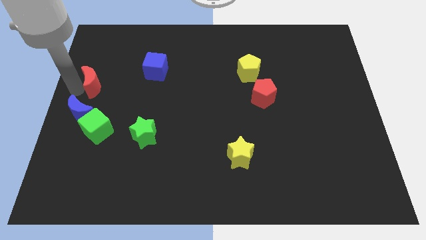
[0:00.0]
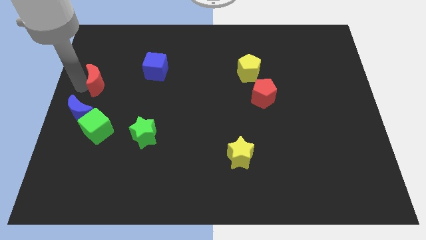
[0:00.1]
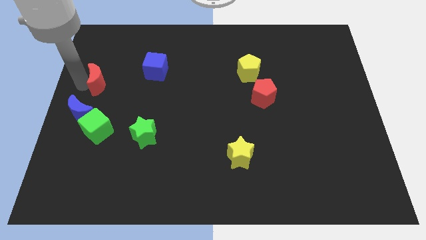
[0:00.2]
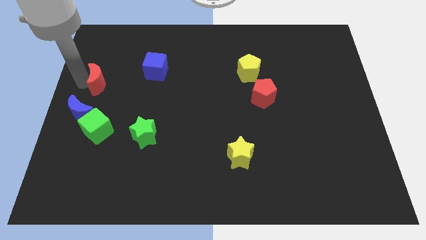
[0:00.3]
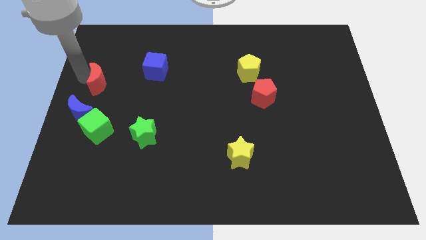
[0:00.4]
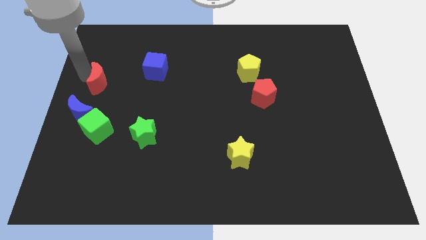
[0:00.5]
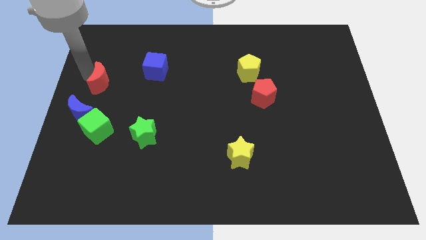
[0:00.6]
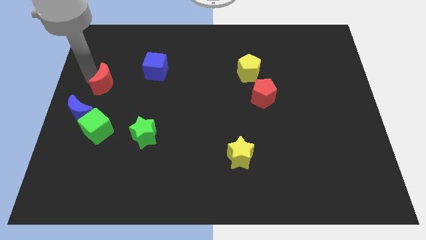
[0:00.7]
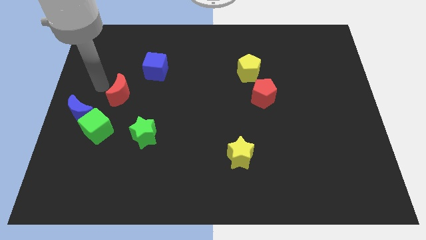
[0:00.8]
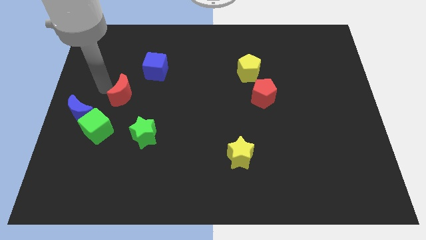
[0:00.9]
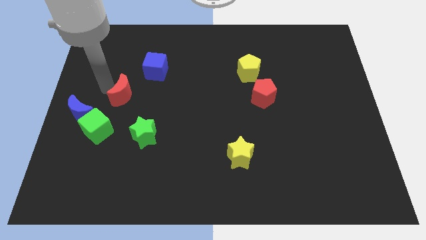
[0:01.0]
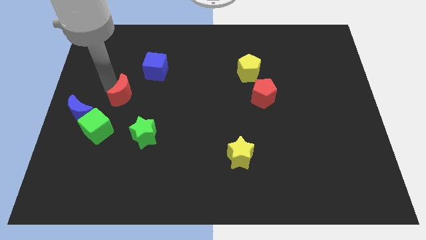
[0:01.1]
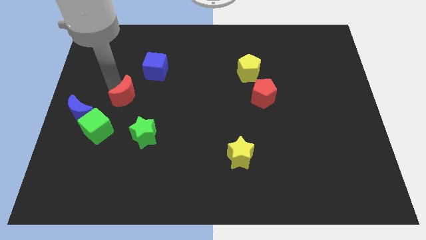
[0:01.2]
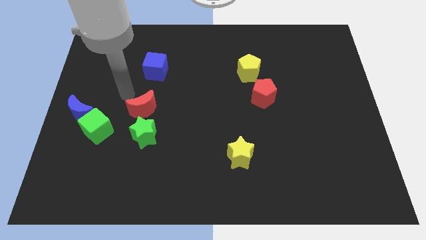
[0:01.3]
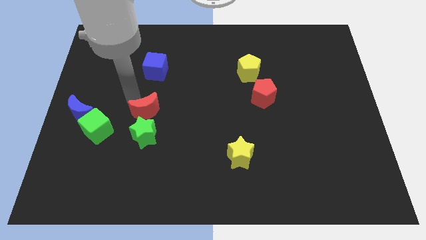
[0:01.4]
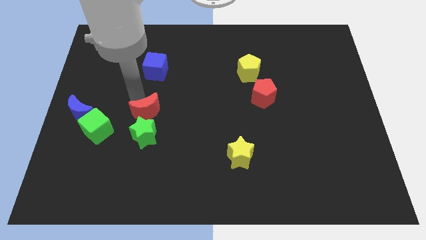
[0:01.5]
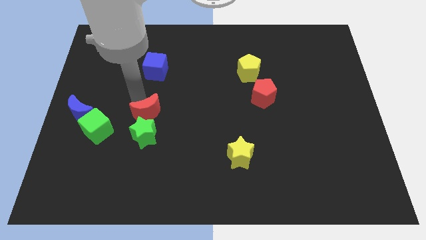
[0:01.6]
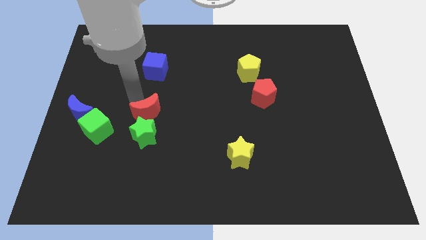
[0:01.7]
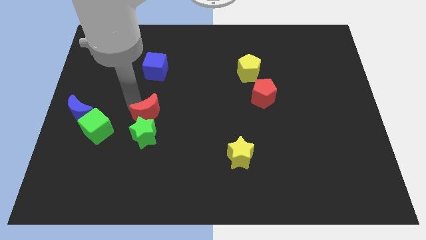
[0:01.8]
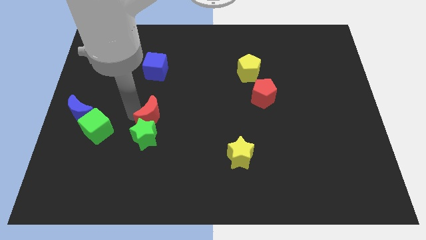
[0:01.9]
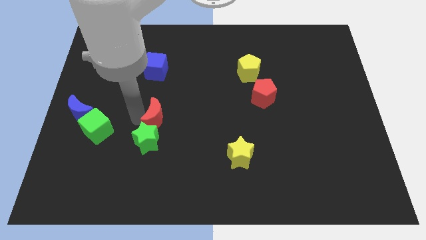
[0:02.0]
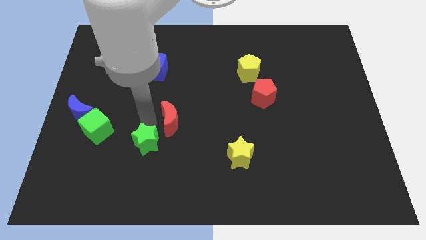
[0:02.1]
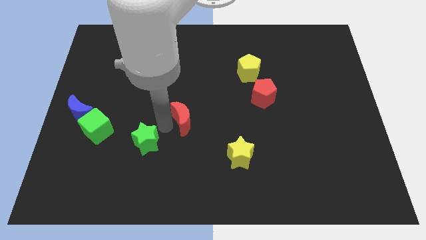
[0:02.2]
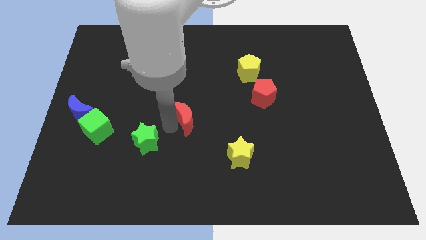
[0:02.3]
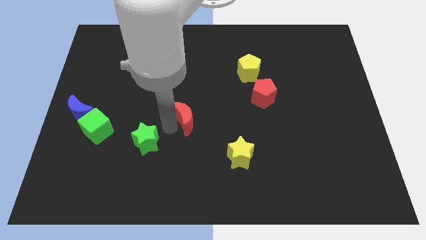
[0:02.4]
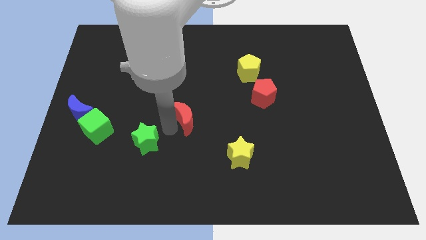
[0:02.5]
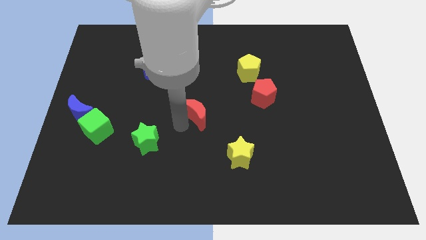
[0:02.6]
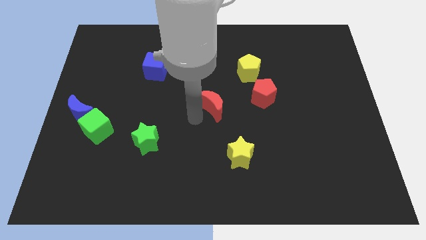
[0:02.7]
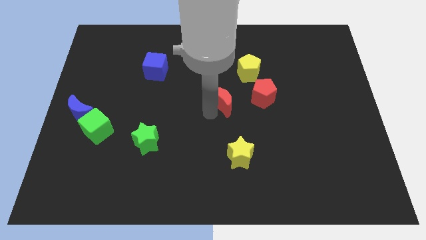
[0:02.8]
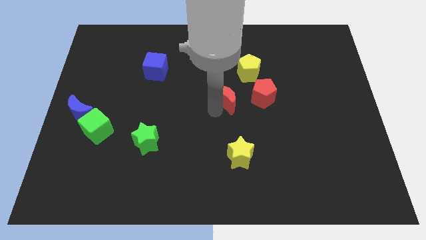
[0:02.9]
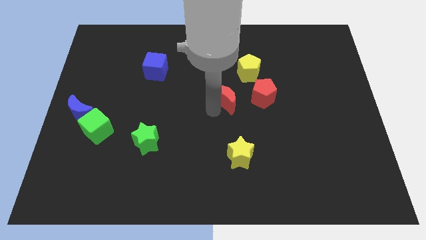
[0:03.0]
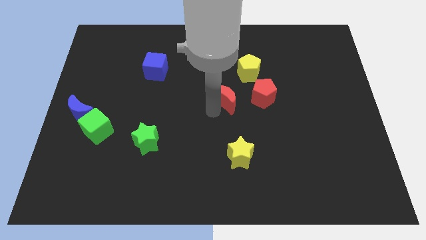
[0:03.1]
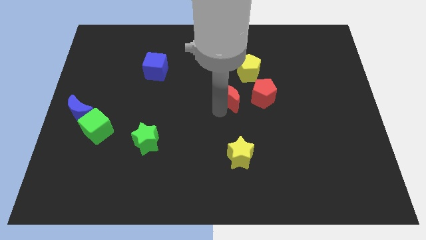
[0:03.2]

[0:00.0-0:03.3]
push the red crescent to the left of the red pentagon

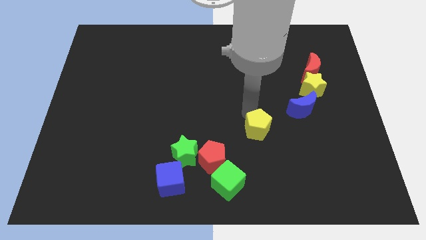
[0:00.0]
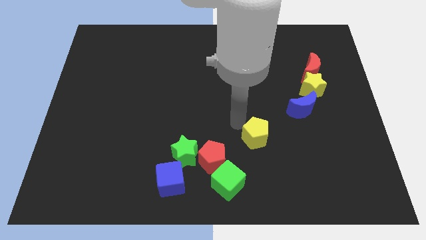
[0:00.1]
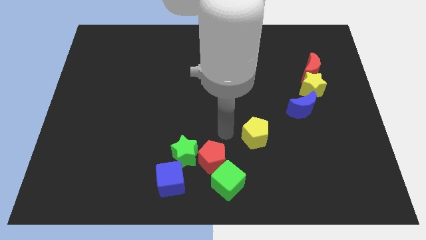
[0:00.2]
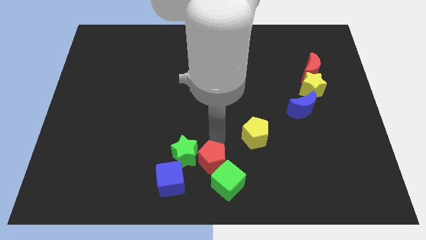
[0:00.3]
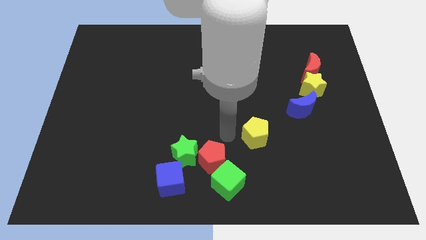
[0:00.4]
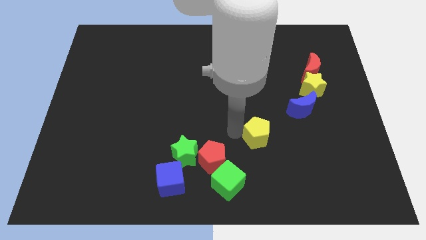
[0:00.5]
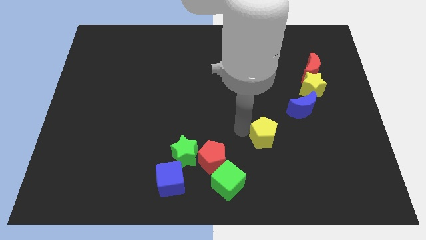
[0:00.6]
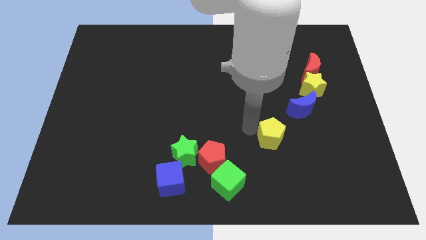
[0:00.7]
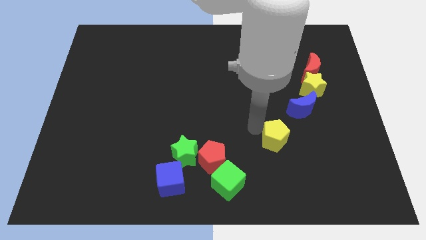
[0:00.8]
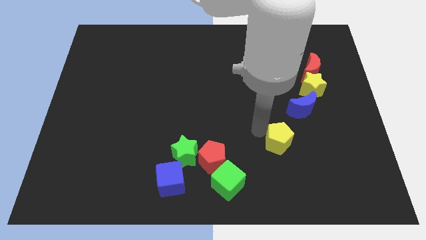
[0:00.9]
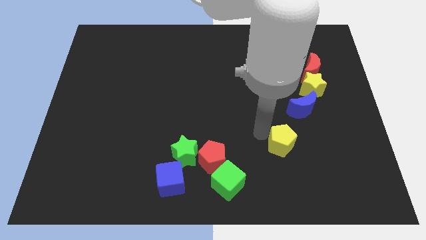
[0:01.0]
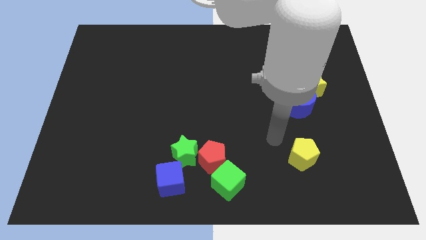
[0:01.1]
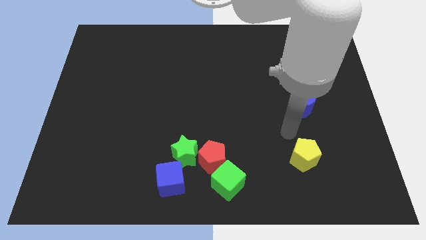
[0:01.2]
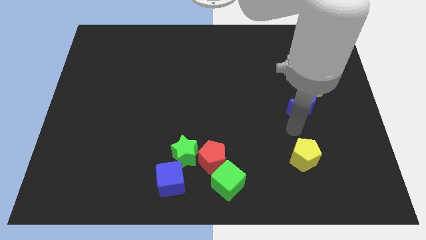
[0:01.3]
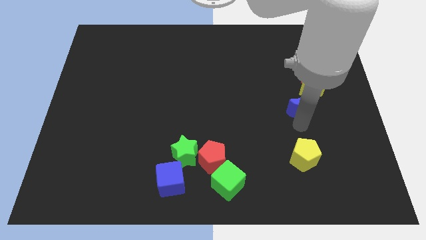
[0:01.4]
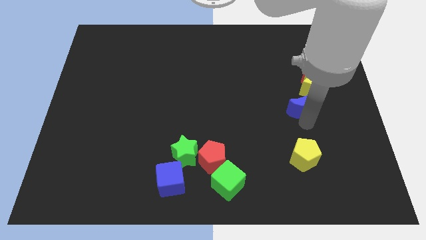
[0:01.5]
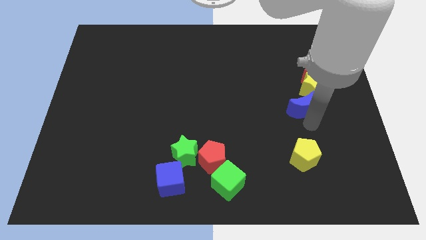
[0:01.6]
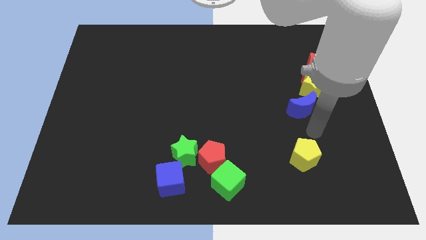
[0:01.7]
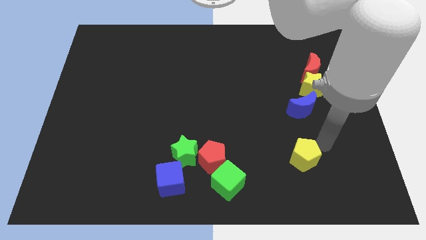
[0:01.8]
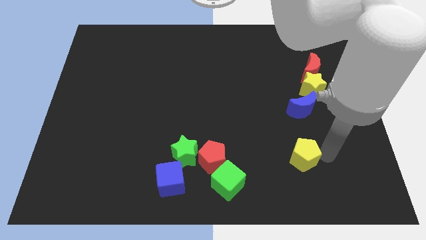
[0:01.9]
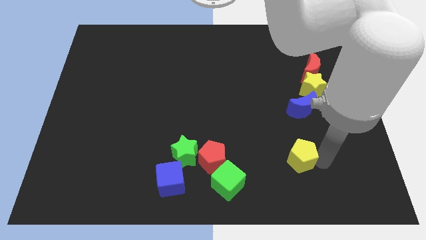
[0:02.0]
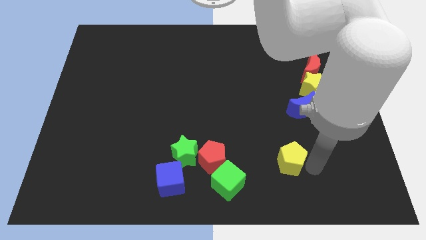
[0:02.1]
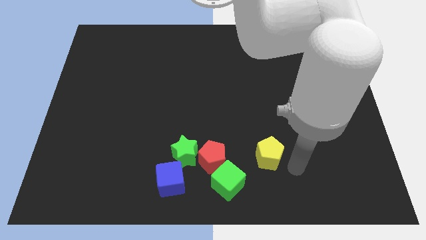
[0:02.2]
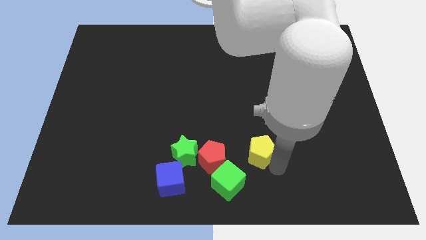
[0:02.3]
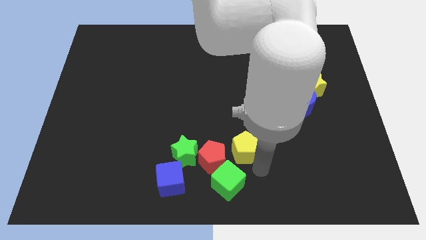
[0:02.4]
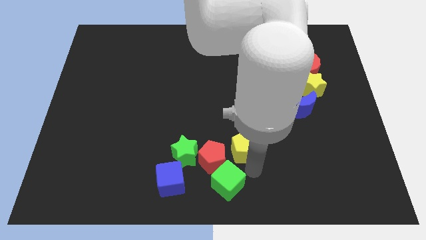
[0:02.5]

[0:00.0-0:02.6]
push yellow pentagon towards red pentagon

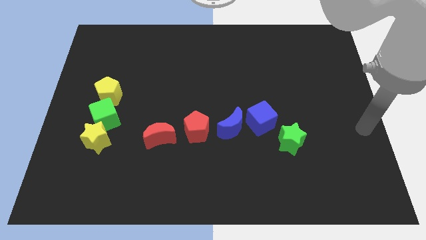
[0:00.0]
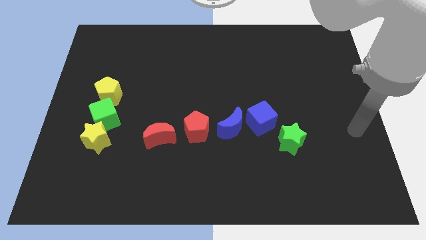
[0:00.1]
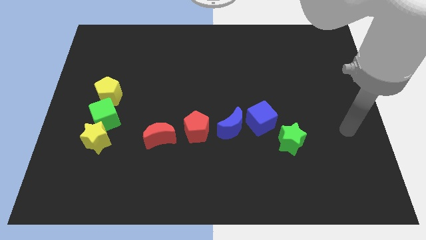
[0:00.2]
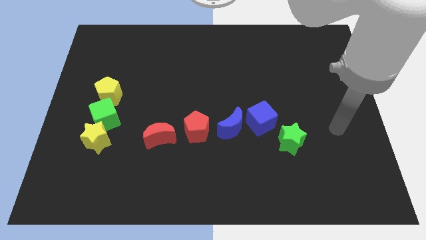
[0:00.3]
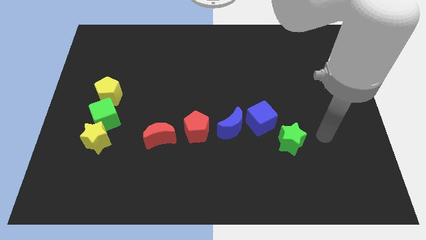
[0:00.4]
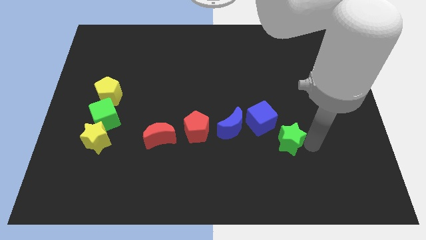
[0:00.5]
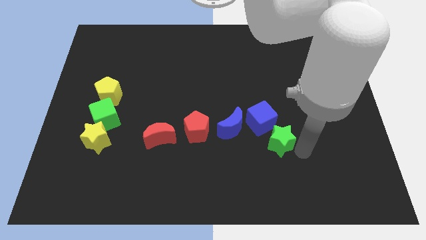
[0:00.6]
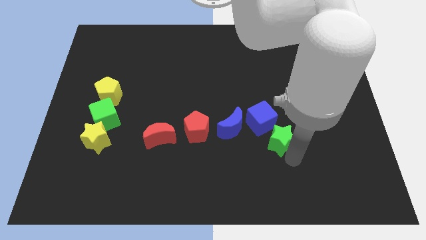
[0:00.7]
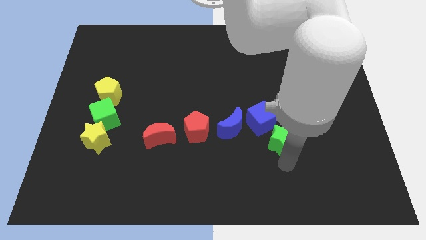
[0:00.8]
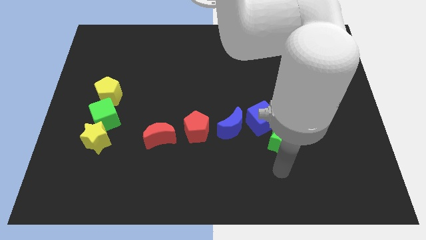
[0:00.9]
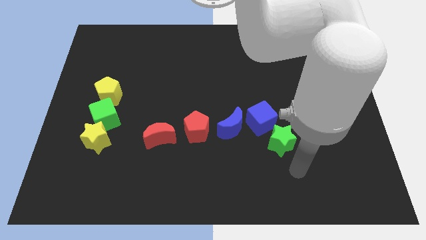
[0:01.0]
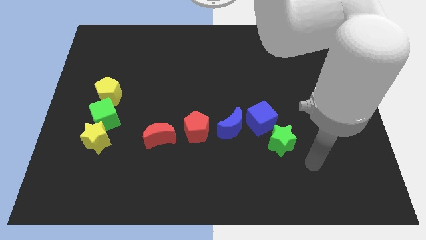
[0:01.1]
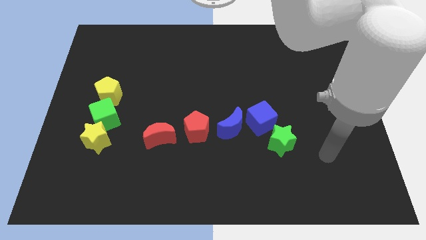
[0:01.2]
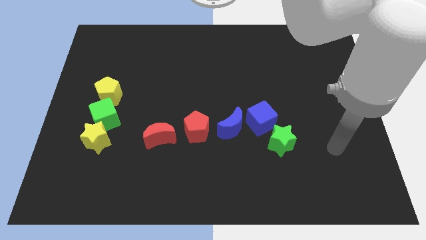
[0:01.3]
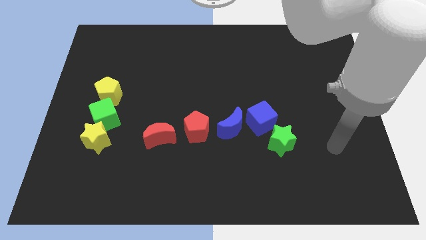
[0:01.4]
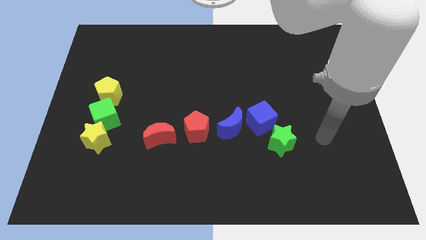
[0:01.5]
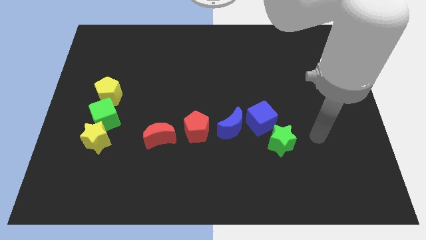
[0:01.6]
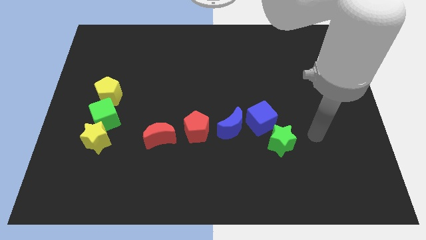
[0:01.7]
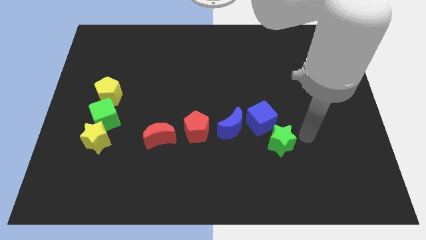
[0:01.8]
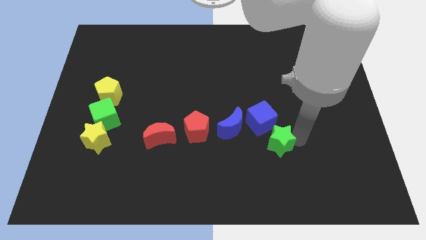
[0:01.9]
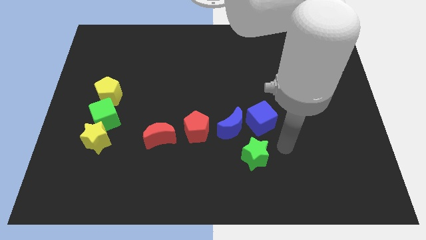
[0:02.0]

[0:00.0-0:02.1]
place the green star below the blue cube

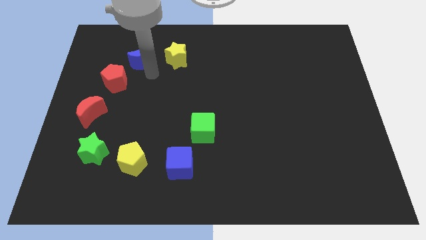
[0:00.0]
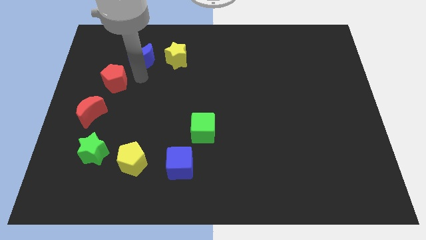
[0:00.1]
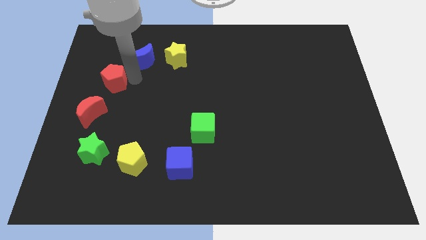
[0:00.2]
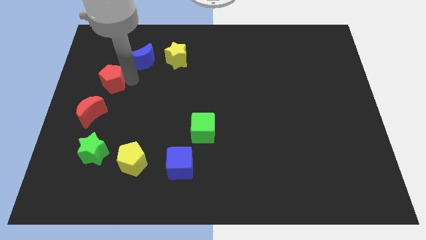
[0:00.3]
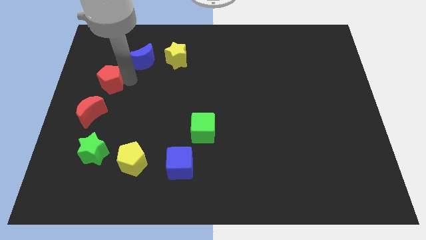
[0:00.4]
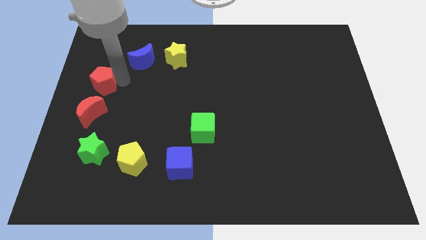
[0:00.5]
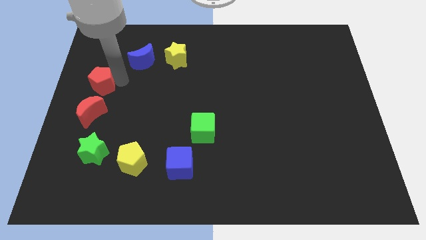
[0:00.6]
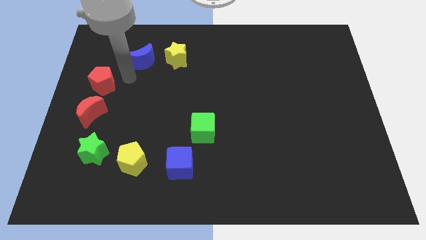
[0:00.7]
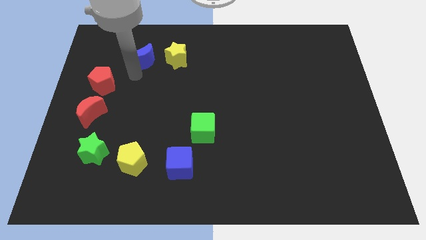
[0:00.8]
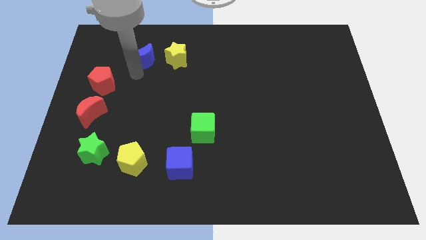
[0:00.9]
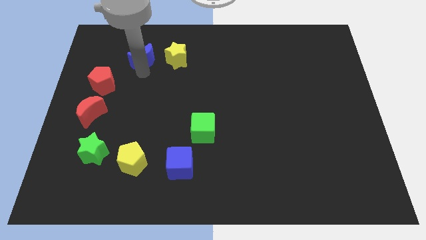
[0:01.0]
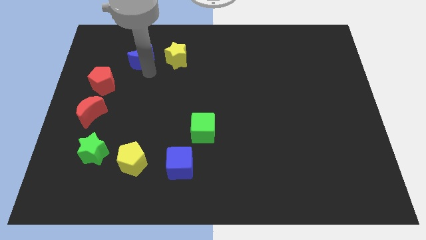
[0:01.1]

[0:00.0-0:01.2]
slightly push the red pentagon to the left
